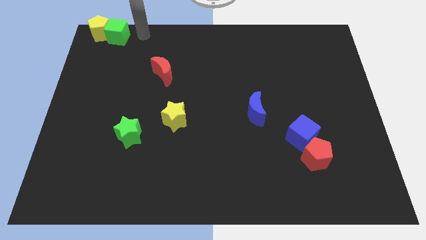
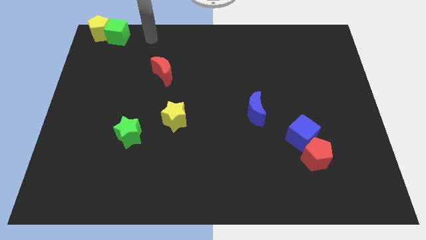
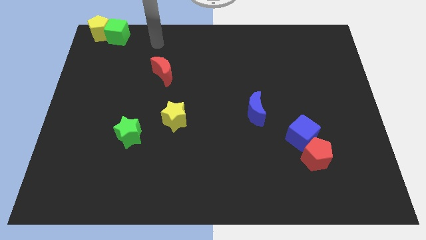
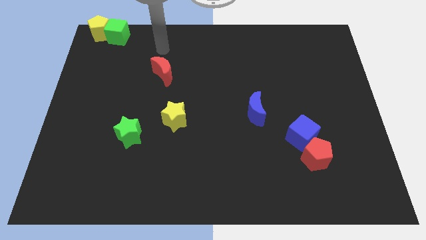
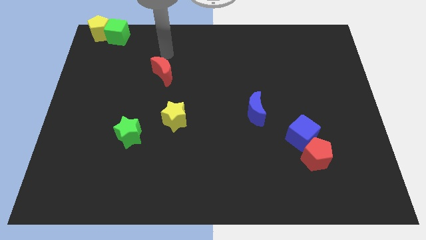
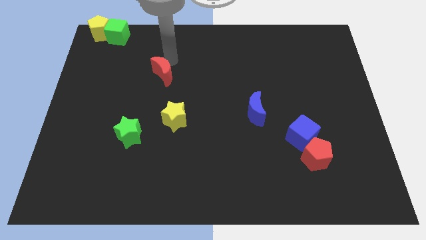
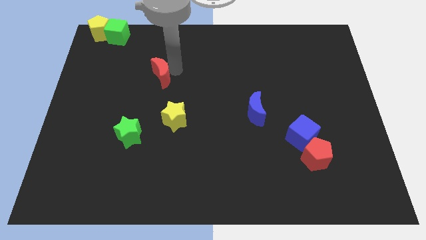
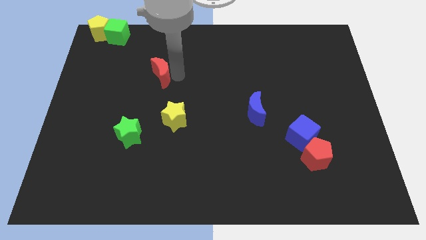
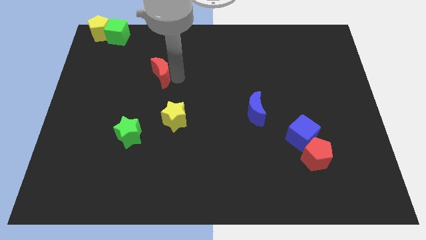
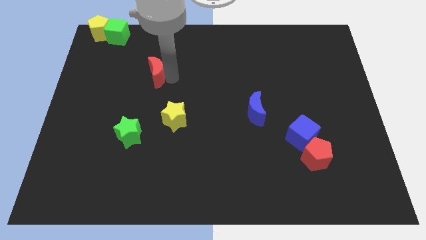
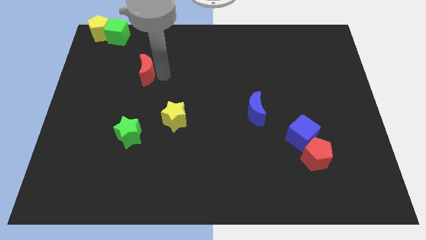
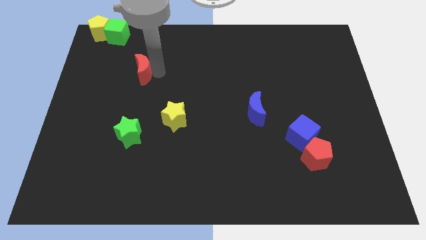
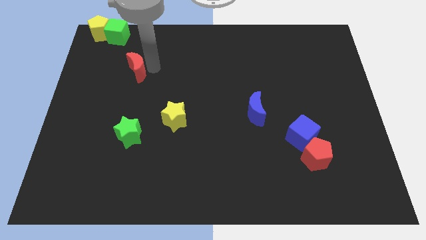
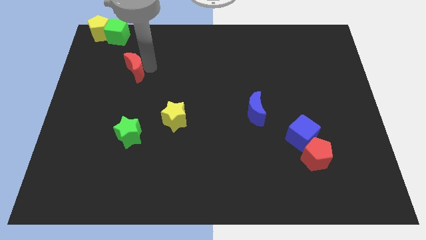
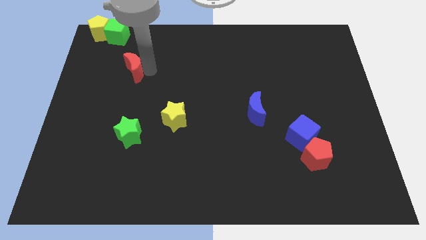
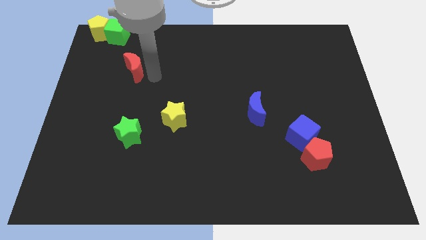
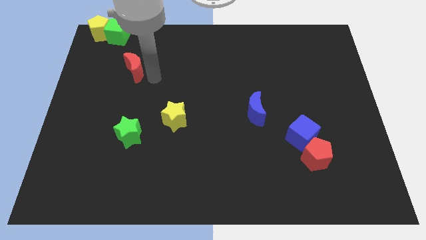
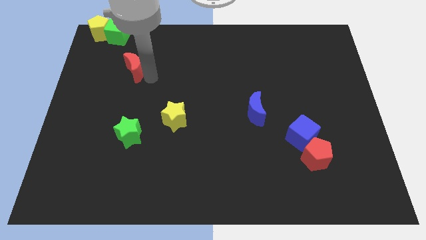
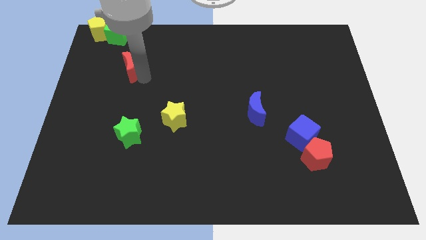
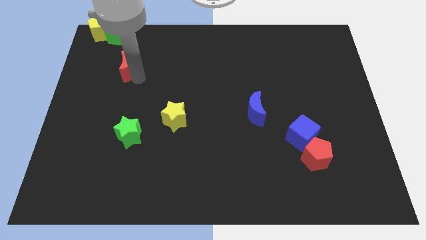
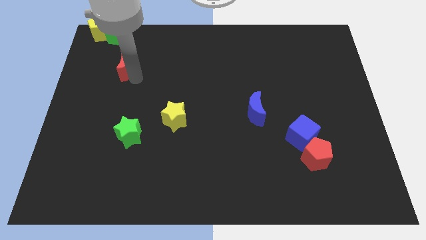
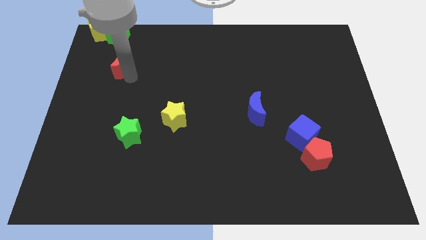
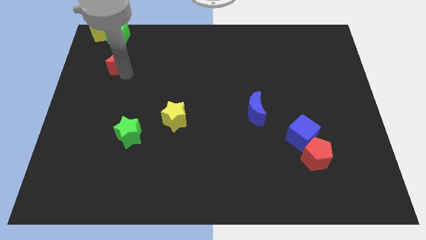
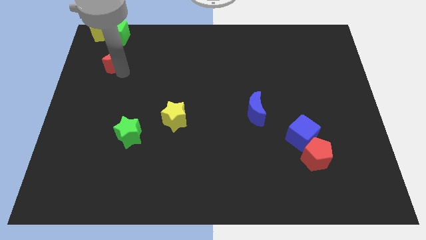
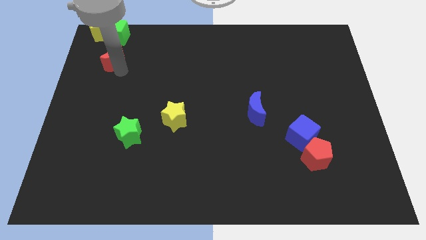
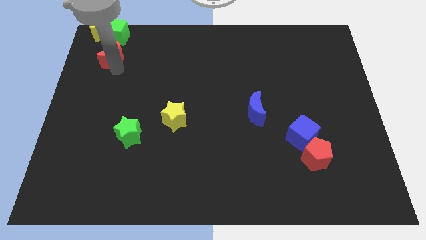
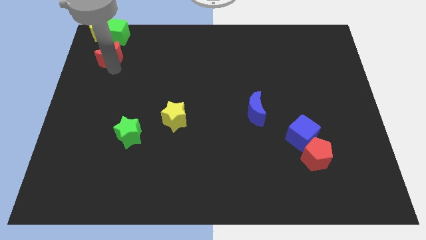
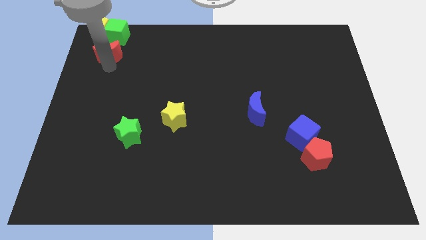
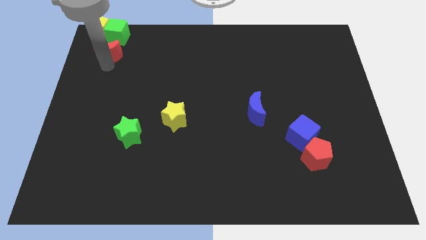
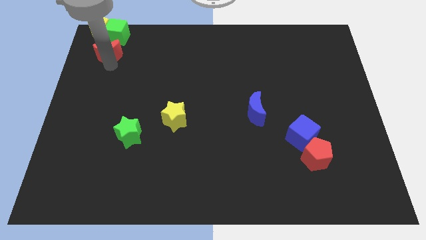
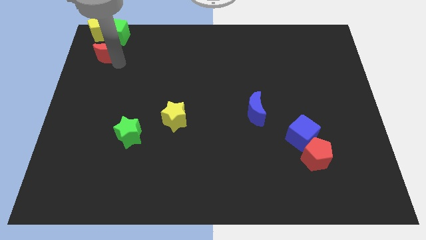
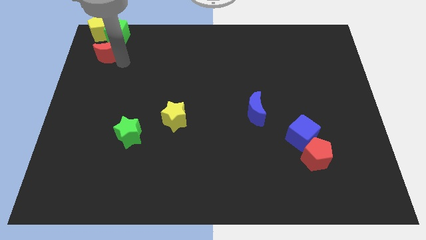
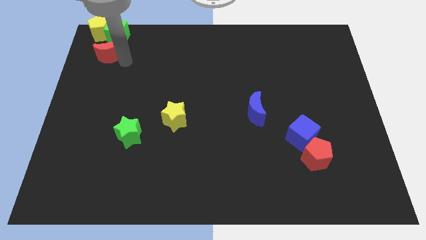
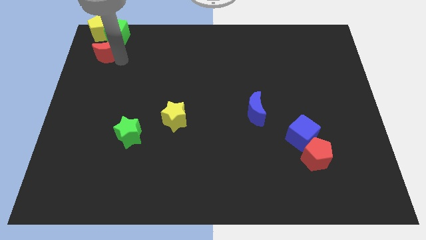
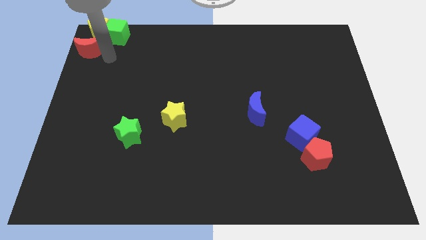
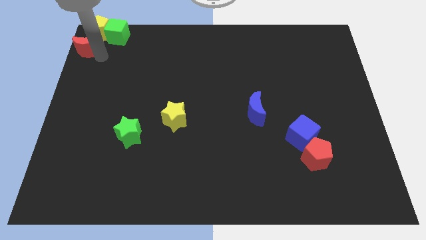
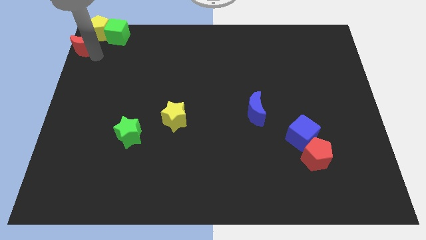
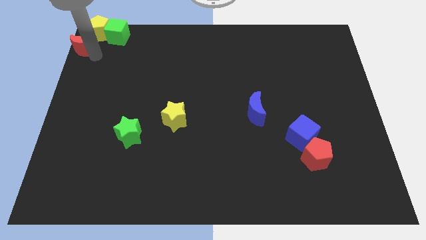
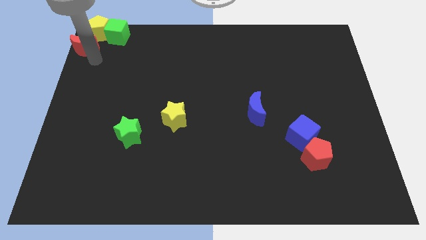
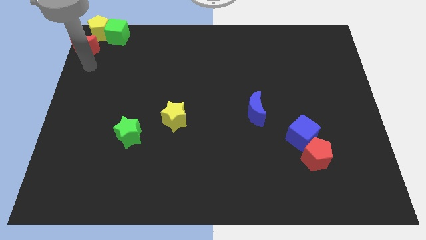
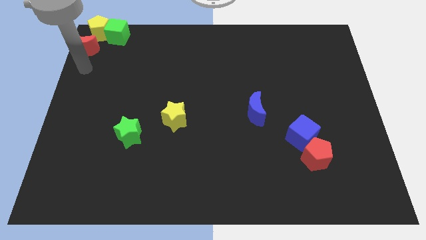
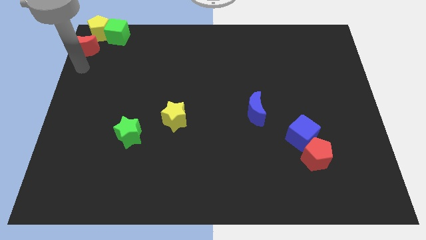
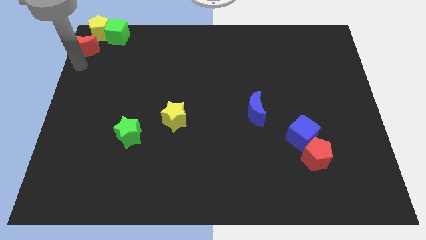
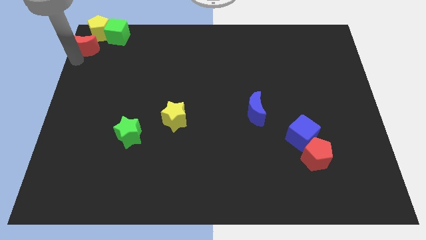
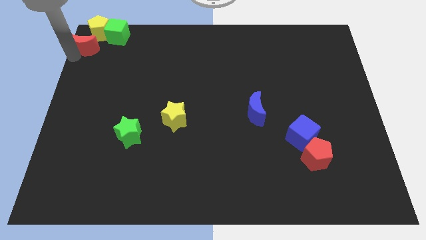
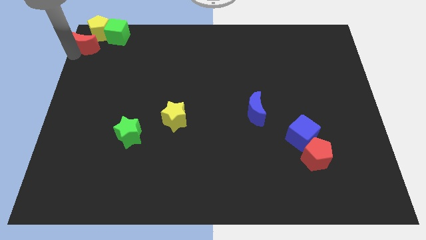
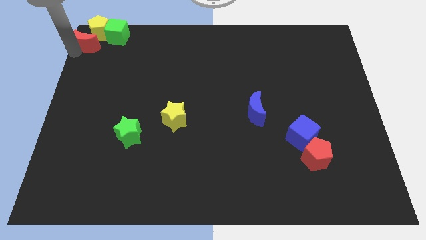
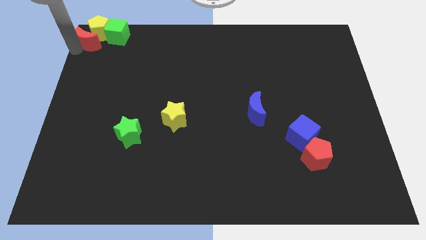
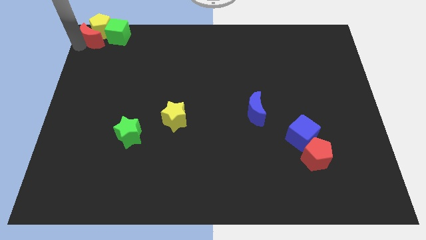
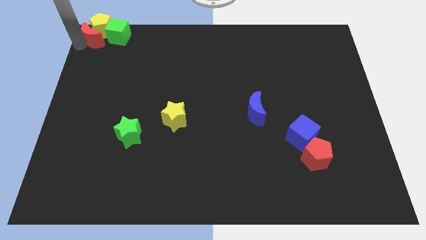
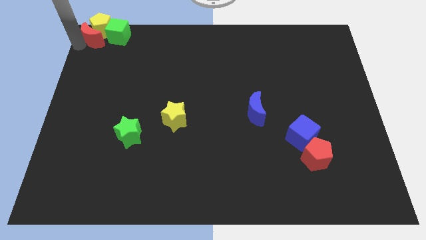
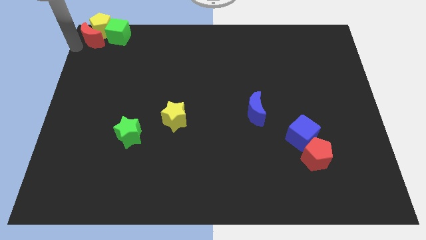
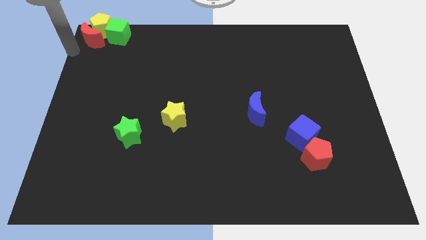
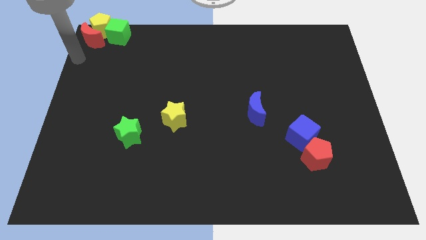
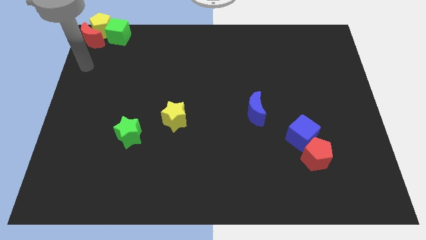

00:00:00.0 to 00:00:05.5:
push the red crescent into the bottom side of the yellow pentagon

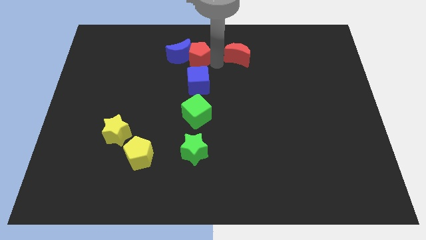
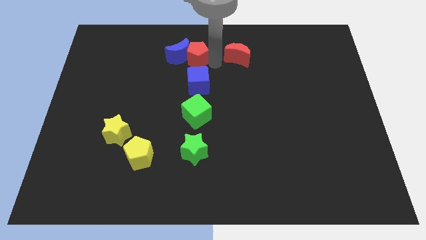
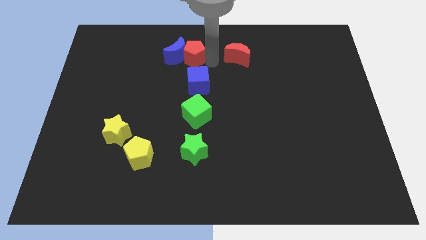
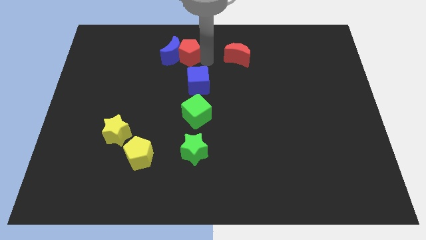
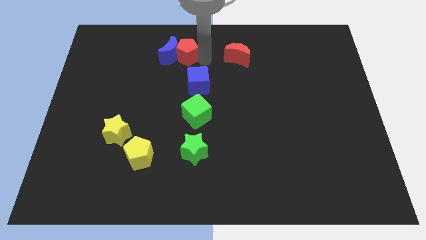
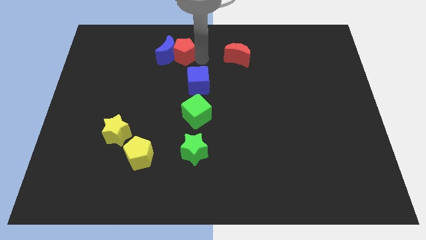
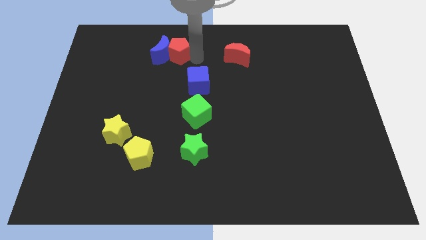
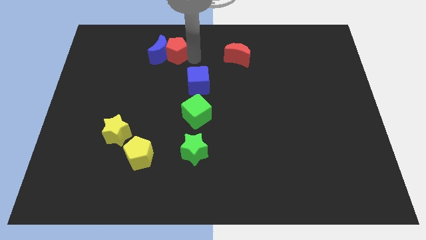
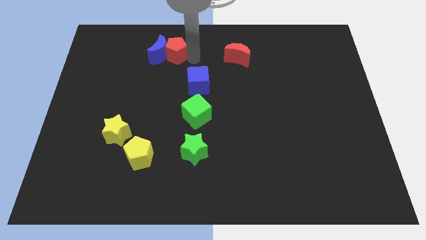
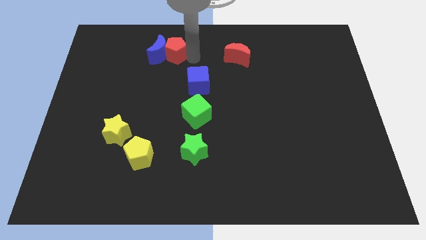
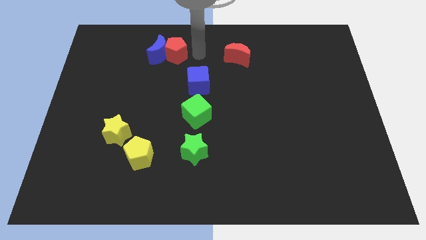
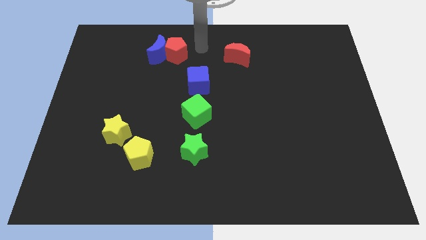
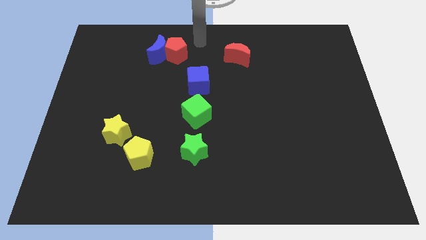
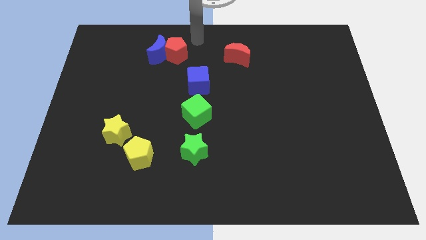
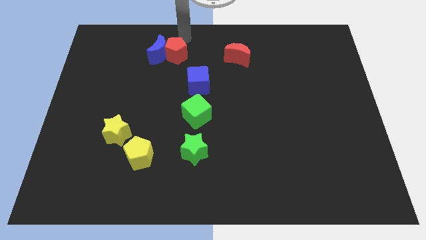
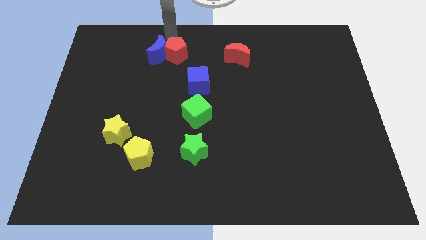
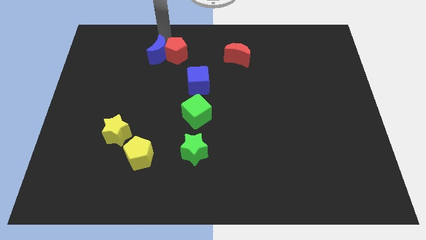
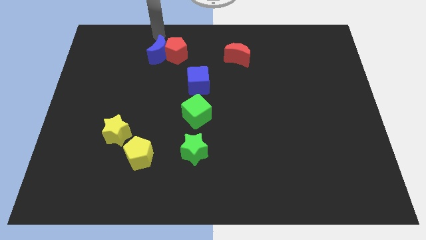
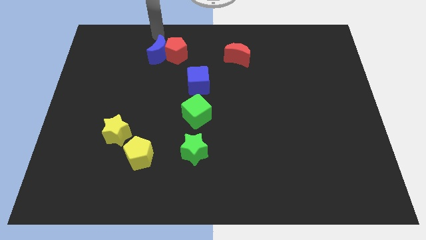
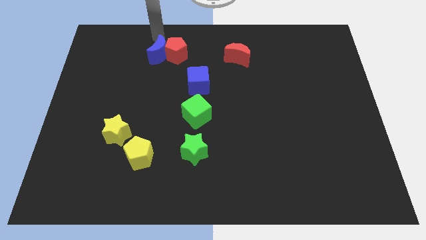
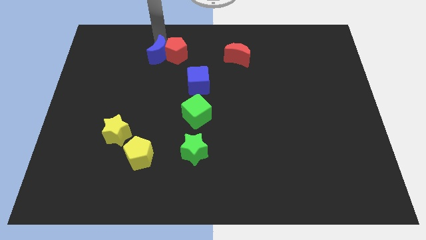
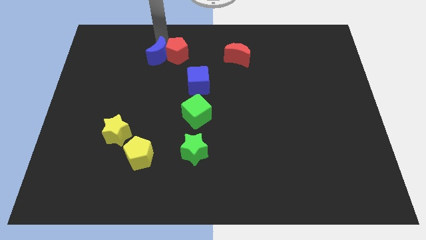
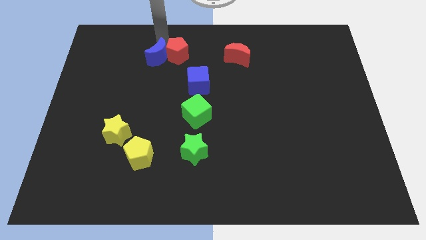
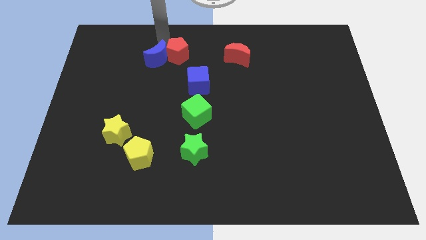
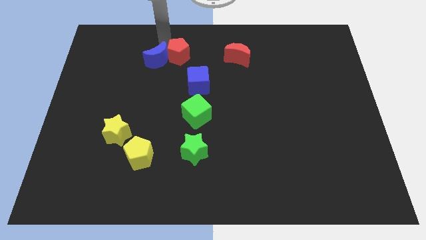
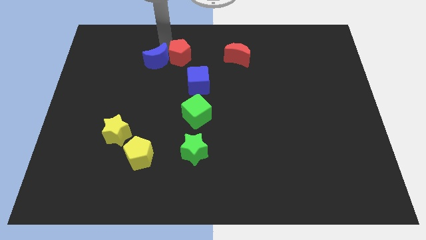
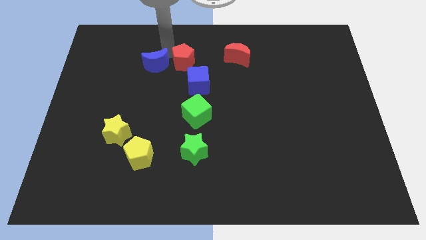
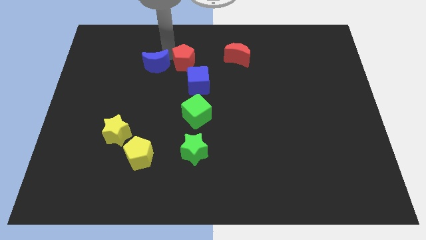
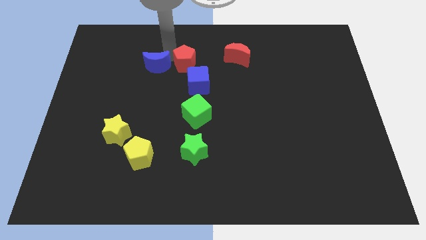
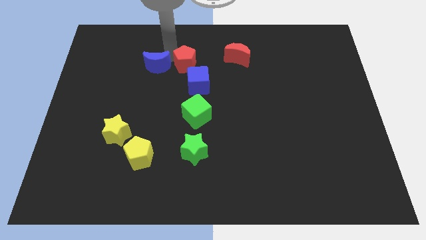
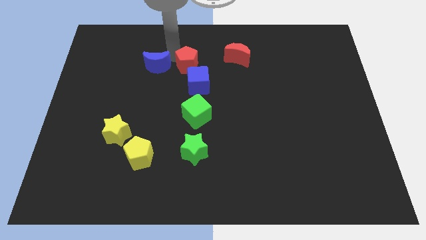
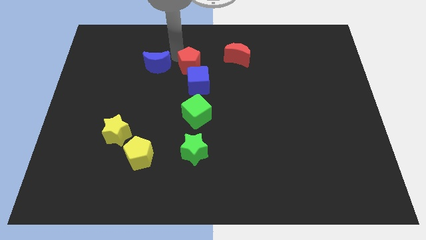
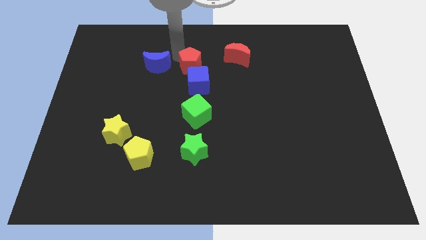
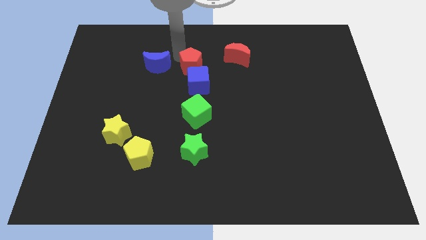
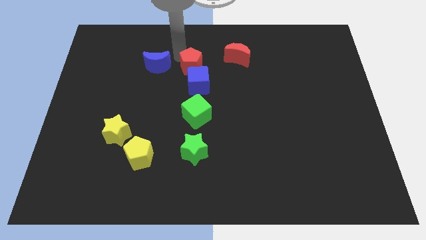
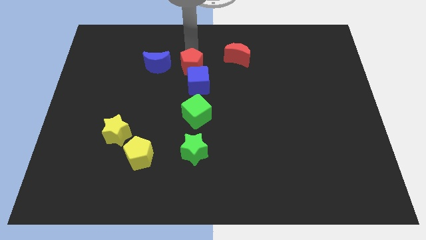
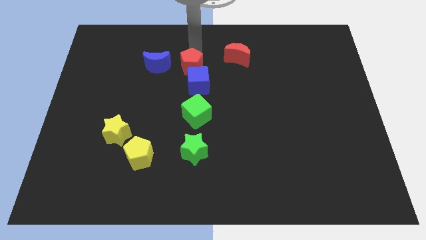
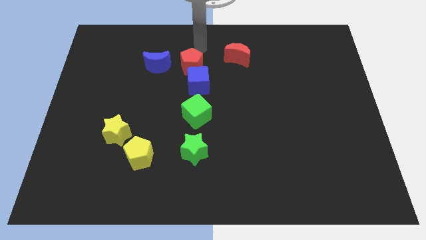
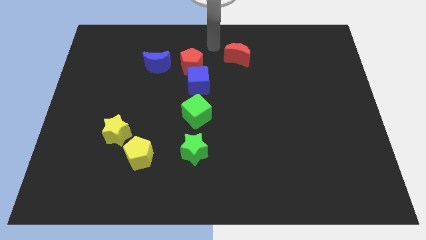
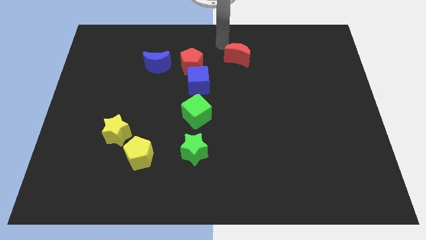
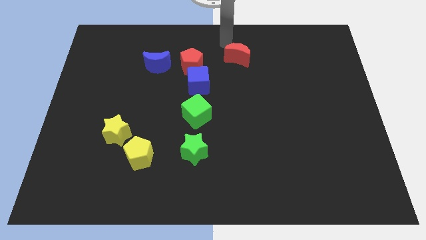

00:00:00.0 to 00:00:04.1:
separate the blue moon and red pentagon
